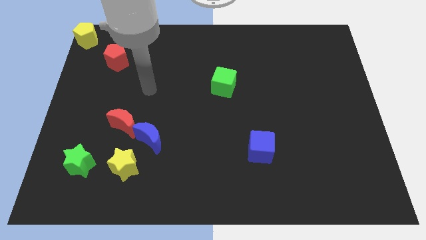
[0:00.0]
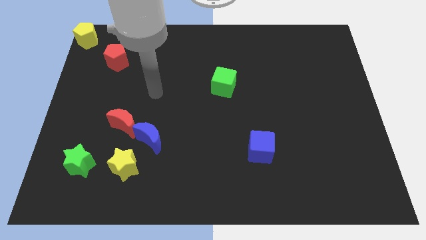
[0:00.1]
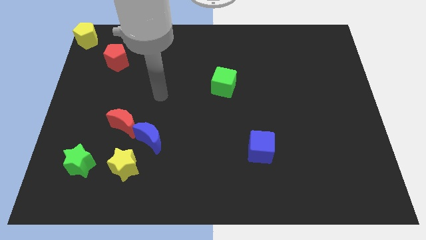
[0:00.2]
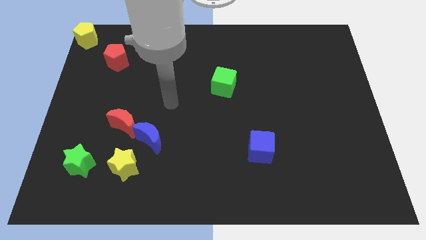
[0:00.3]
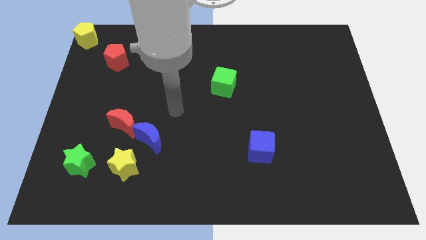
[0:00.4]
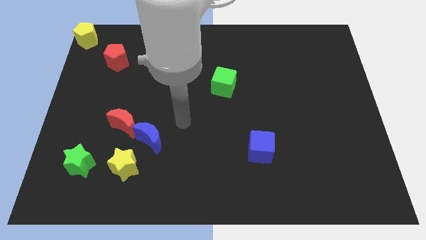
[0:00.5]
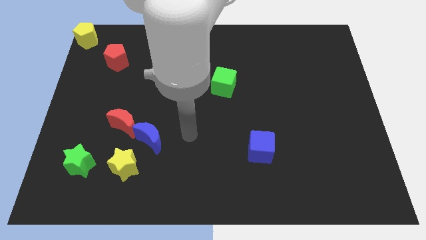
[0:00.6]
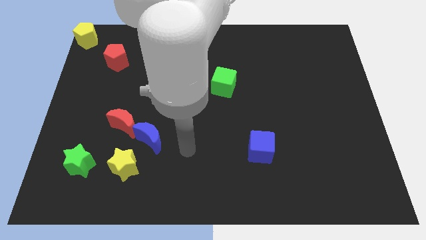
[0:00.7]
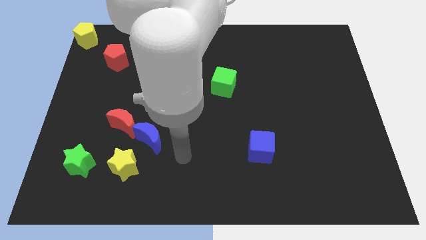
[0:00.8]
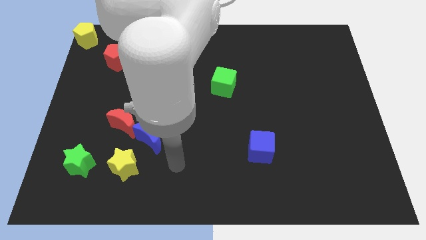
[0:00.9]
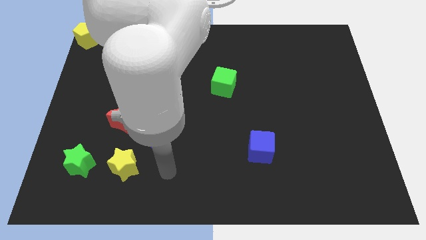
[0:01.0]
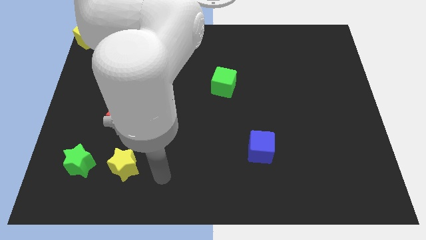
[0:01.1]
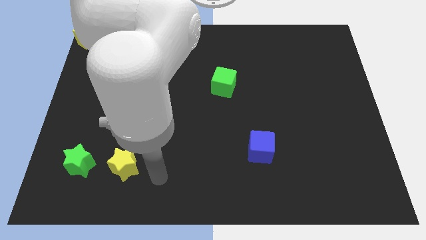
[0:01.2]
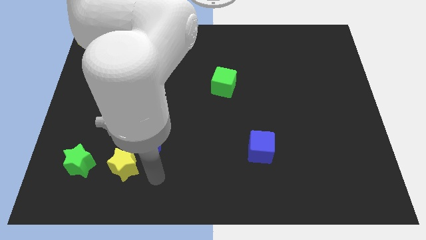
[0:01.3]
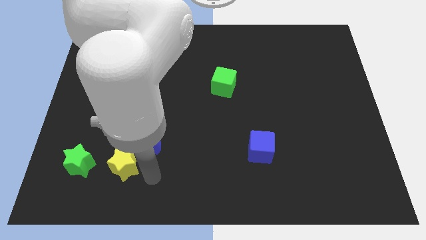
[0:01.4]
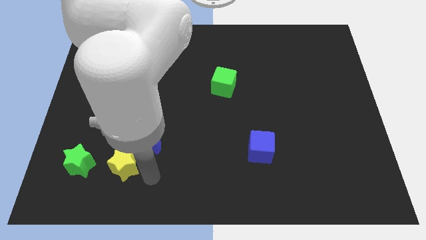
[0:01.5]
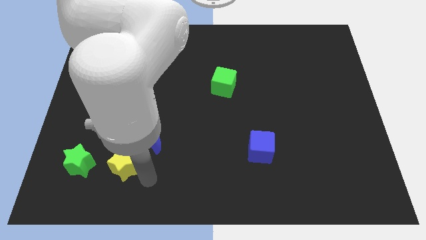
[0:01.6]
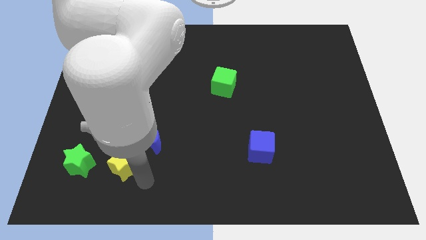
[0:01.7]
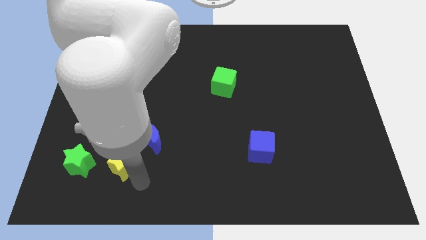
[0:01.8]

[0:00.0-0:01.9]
point your hand at the bottom right side of the yellow star

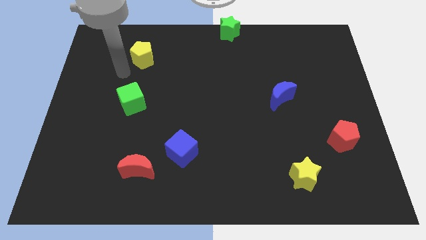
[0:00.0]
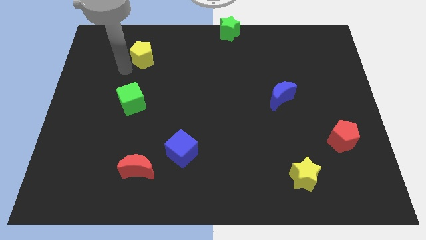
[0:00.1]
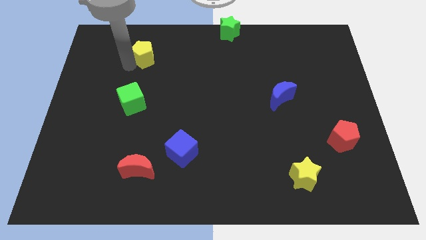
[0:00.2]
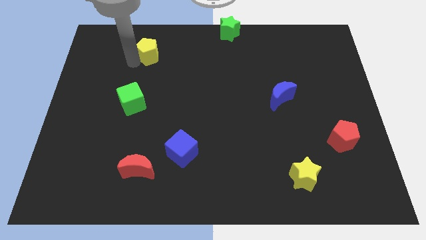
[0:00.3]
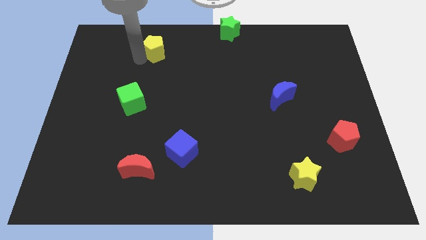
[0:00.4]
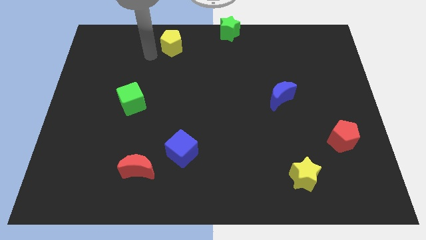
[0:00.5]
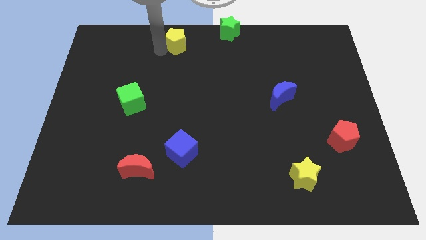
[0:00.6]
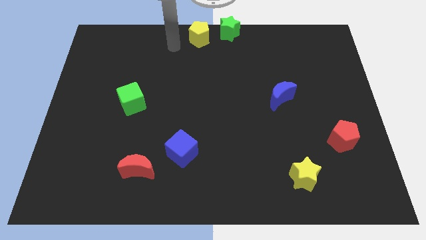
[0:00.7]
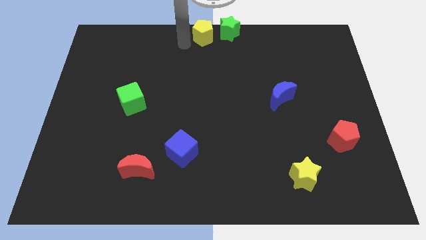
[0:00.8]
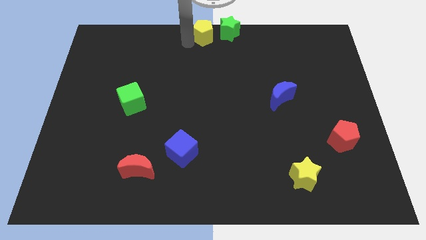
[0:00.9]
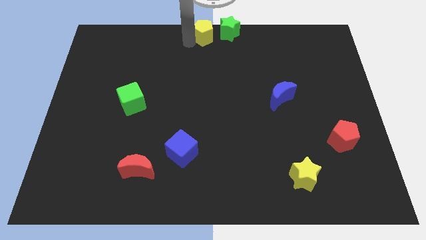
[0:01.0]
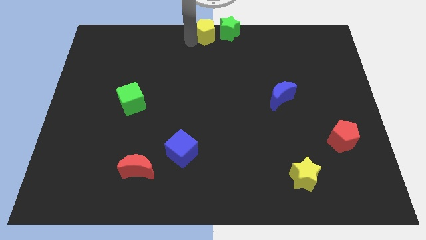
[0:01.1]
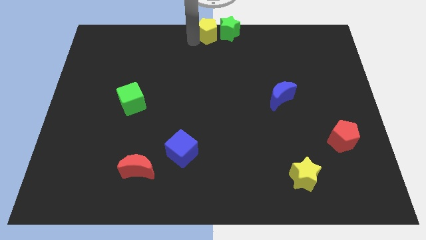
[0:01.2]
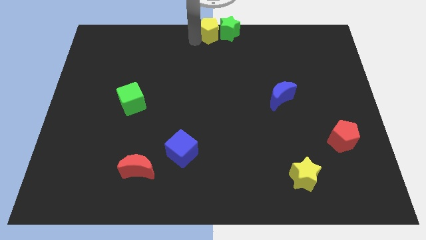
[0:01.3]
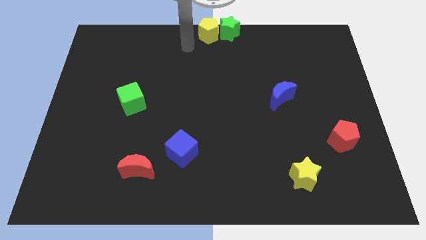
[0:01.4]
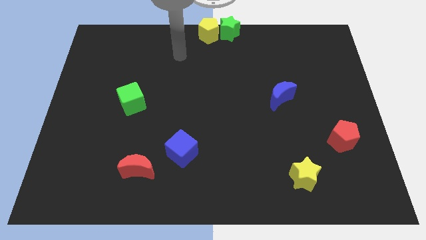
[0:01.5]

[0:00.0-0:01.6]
place the yellow pentagon close to the green star

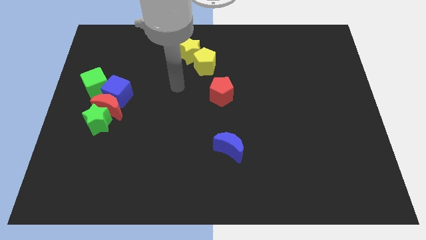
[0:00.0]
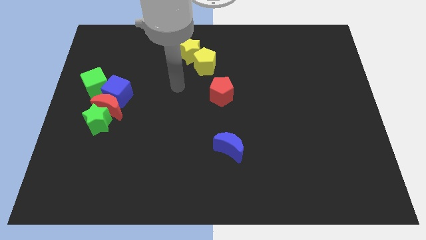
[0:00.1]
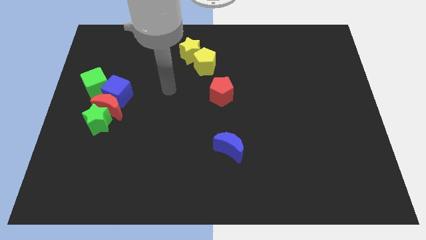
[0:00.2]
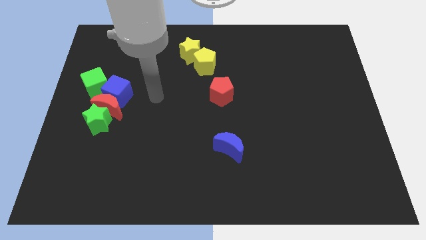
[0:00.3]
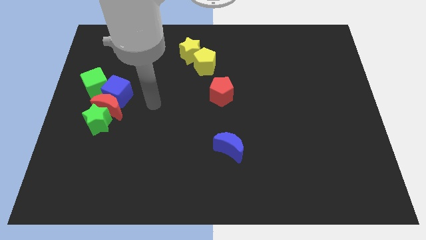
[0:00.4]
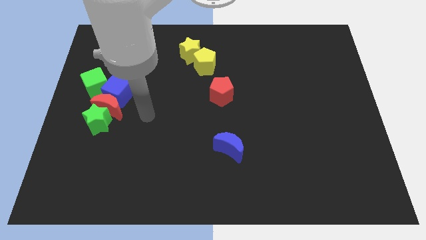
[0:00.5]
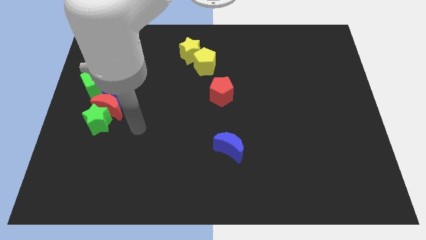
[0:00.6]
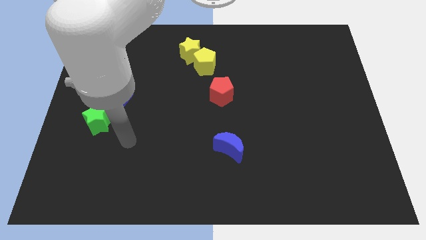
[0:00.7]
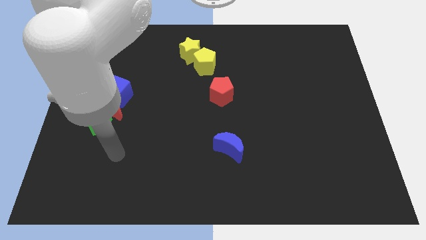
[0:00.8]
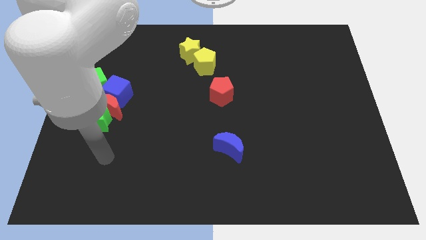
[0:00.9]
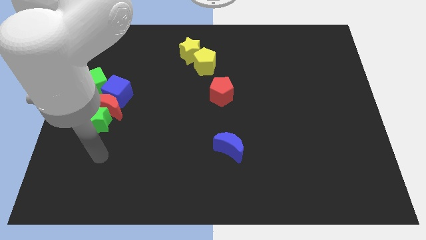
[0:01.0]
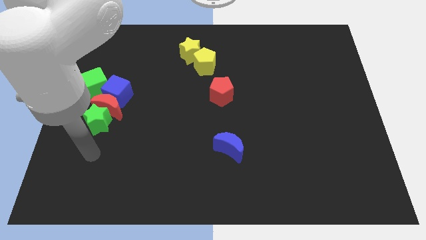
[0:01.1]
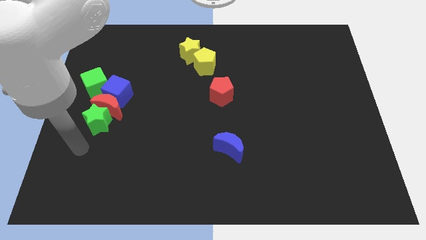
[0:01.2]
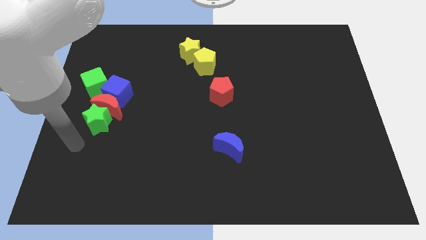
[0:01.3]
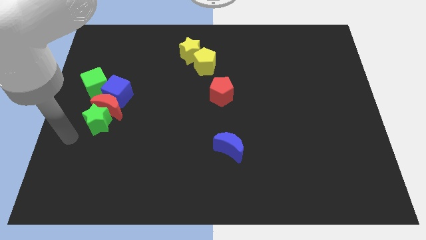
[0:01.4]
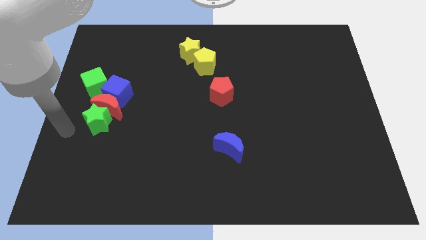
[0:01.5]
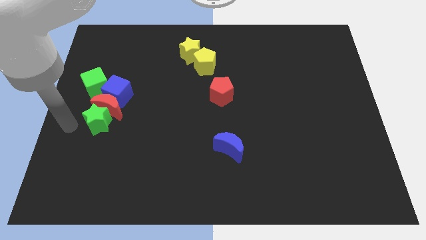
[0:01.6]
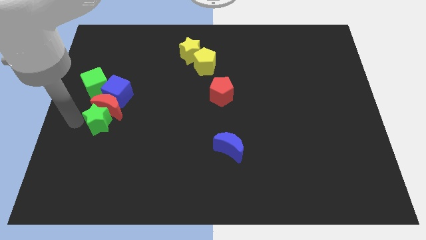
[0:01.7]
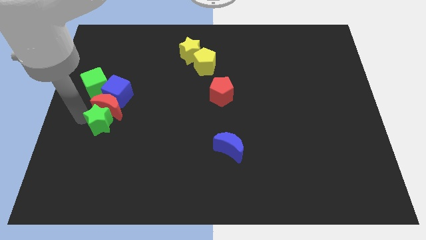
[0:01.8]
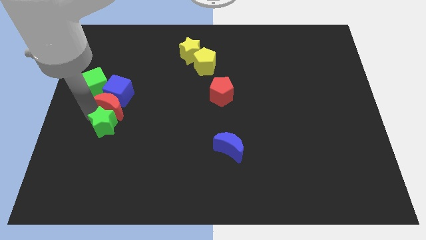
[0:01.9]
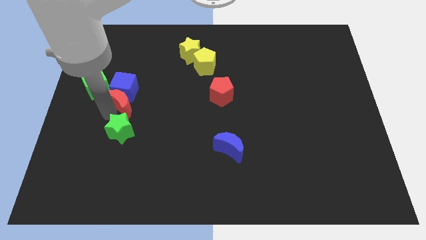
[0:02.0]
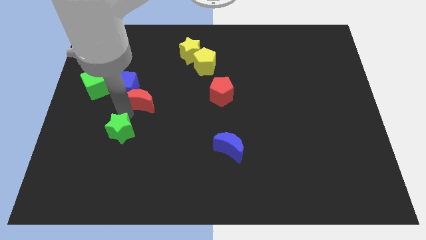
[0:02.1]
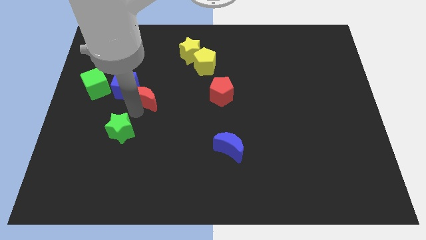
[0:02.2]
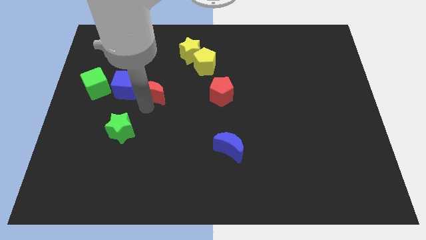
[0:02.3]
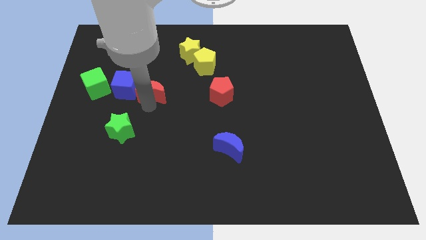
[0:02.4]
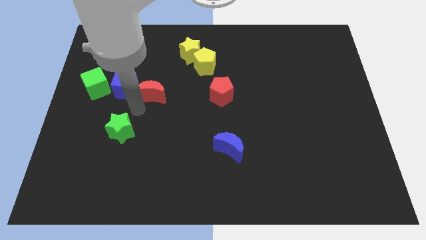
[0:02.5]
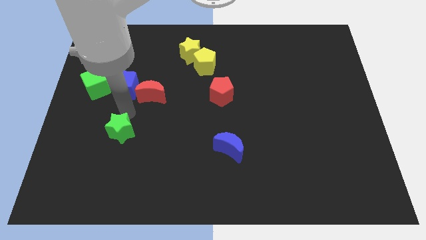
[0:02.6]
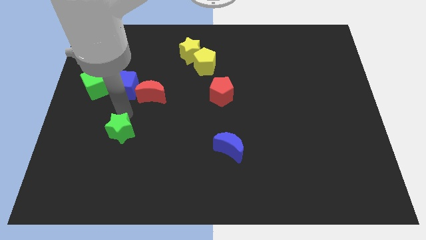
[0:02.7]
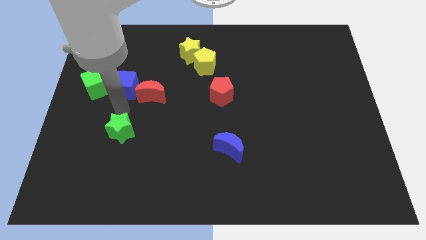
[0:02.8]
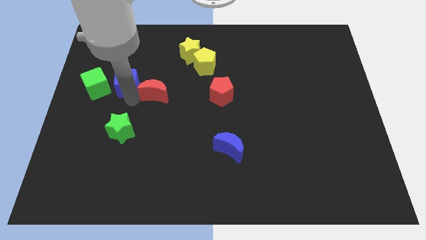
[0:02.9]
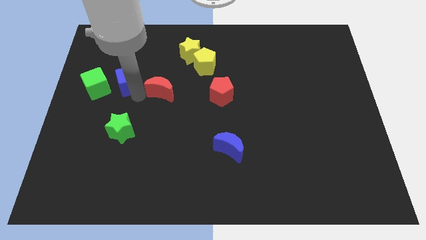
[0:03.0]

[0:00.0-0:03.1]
separate red crescent and green star

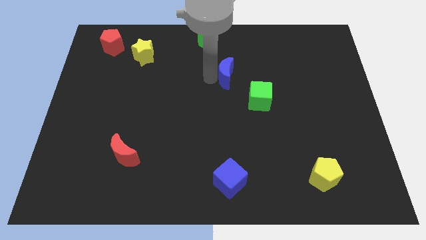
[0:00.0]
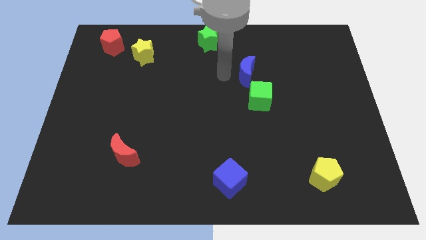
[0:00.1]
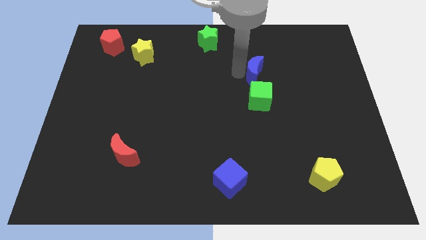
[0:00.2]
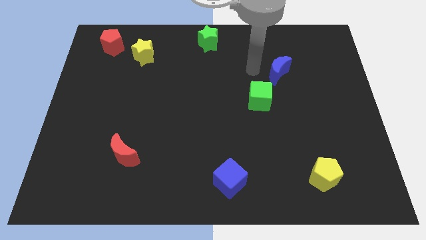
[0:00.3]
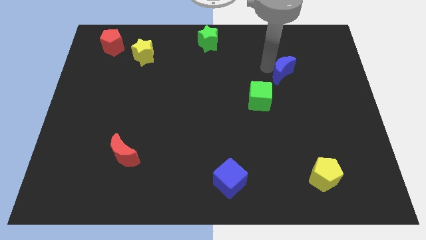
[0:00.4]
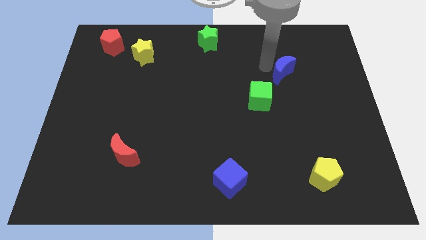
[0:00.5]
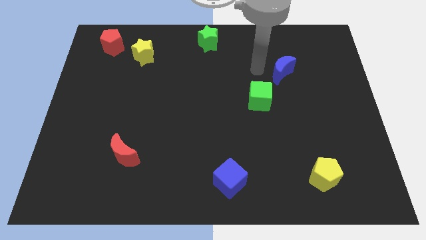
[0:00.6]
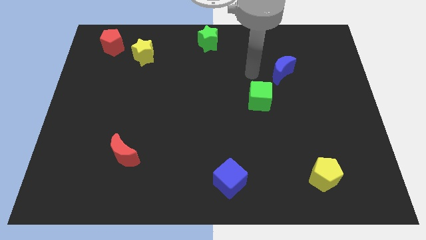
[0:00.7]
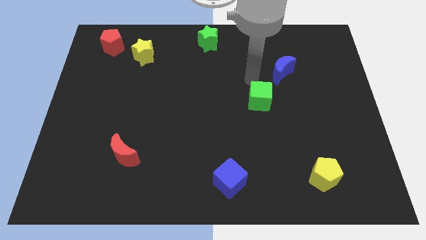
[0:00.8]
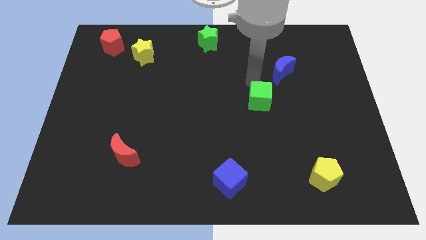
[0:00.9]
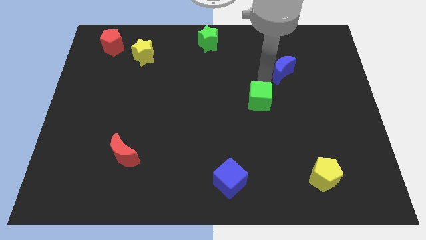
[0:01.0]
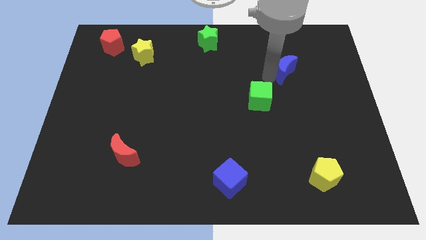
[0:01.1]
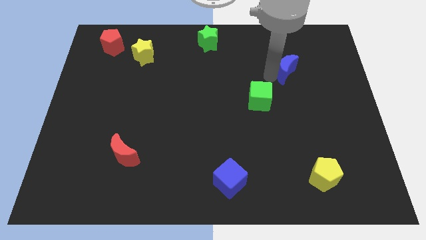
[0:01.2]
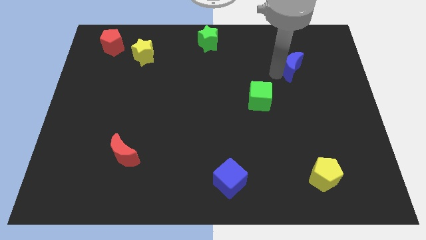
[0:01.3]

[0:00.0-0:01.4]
place the blue crescent towards the top right side of the green cube

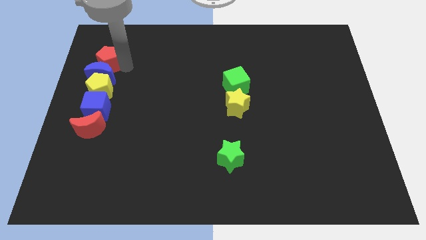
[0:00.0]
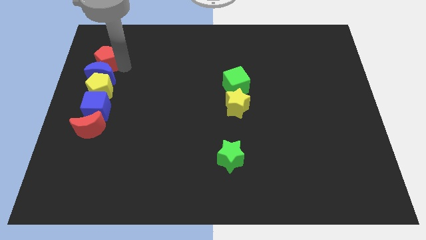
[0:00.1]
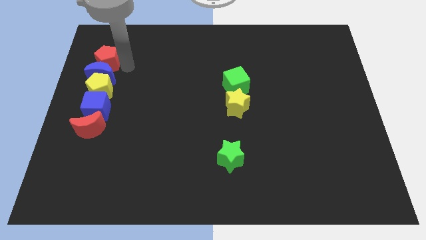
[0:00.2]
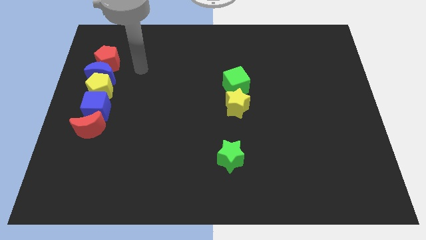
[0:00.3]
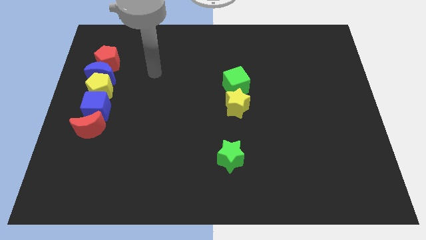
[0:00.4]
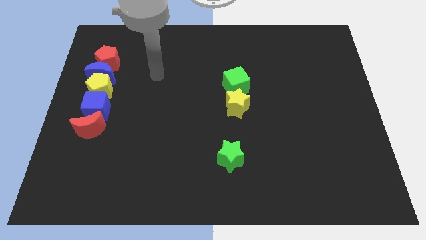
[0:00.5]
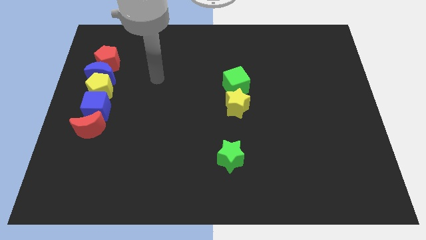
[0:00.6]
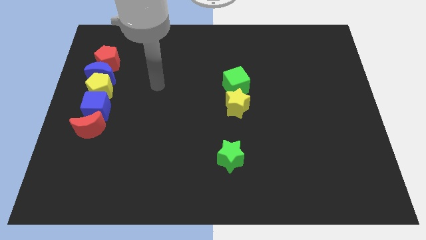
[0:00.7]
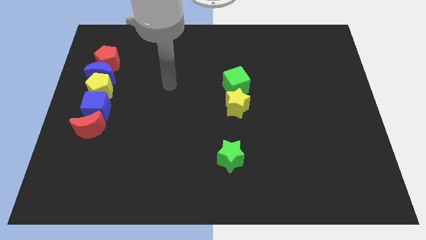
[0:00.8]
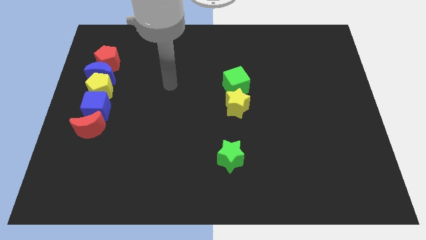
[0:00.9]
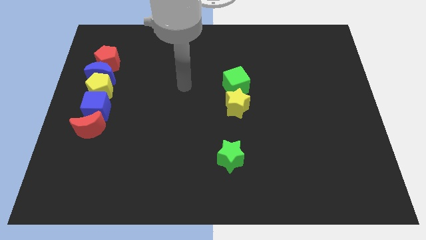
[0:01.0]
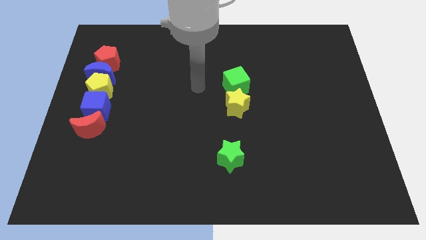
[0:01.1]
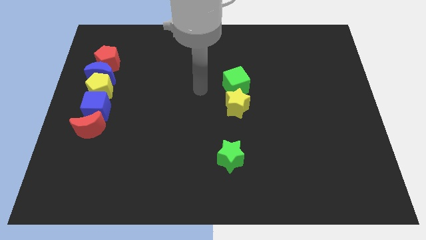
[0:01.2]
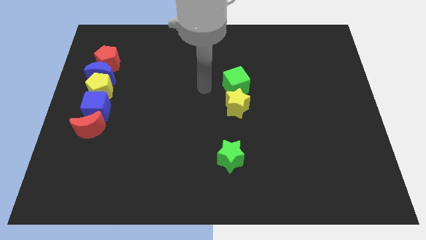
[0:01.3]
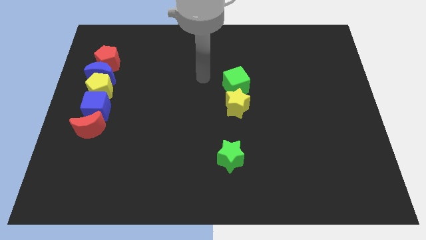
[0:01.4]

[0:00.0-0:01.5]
move your arm away from the red pentagon
